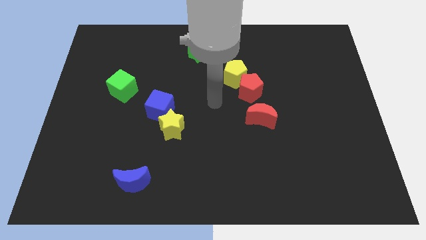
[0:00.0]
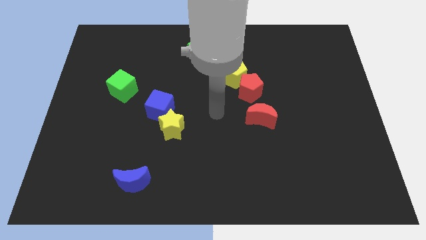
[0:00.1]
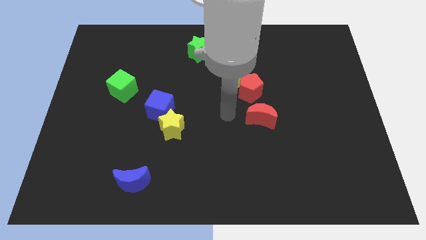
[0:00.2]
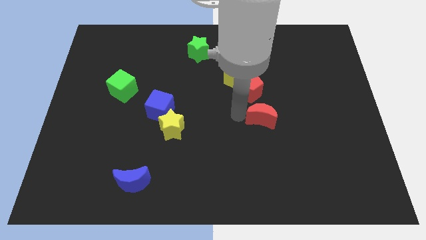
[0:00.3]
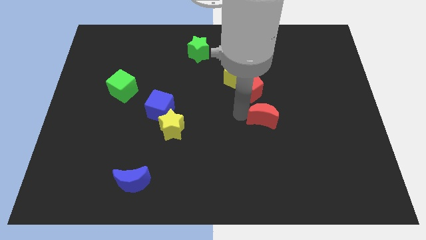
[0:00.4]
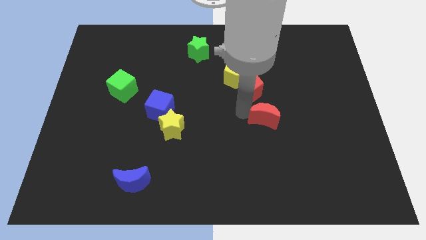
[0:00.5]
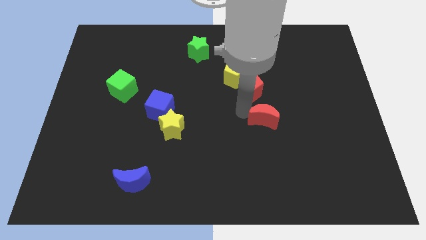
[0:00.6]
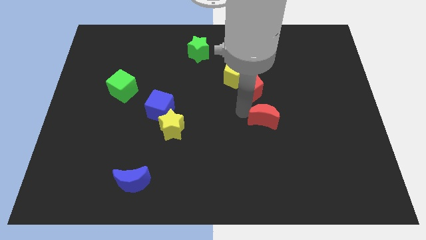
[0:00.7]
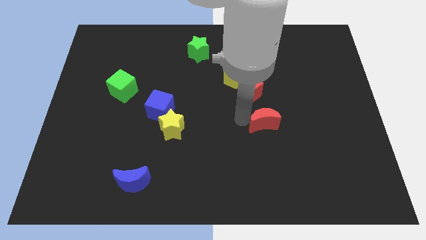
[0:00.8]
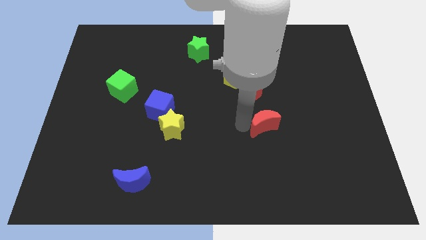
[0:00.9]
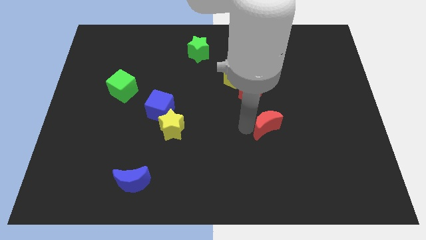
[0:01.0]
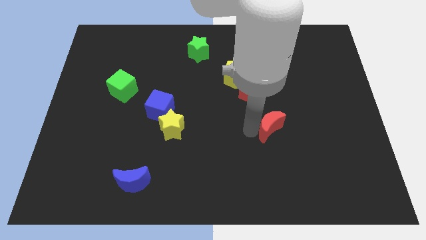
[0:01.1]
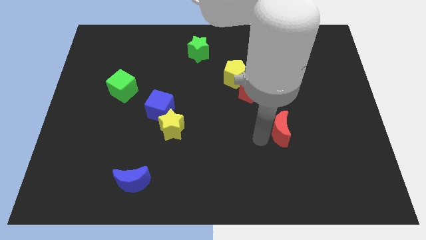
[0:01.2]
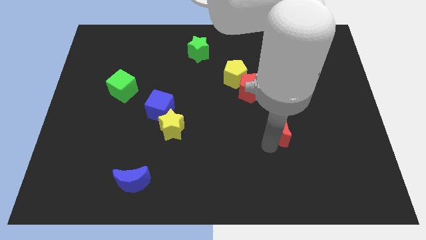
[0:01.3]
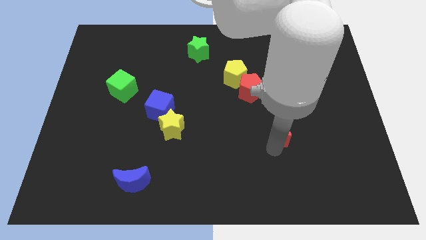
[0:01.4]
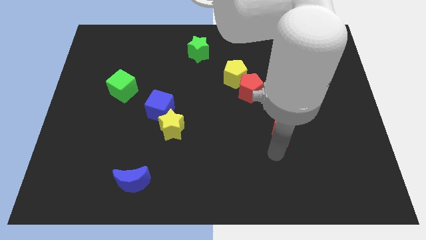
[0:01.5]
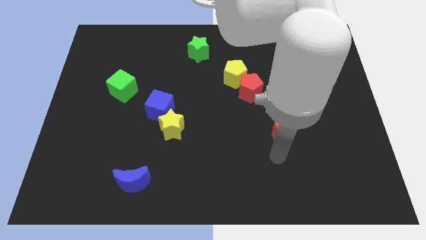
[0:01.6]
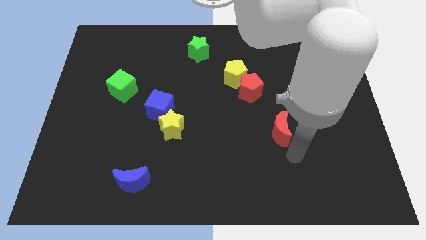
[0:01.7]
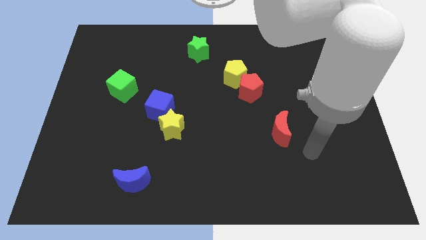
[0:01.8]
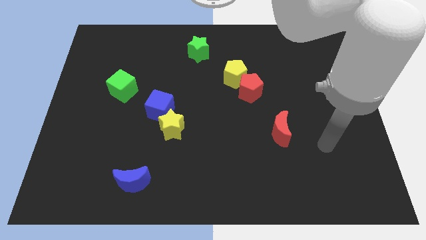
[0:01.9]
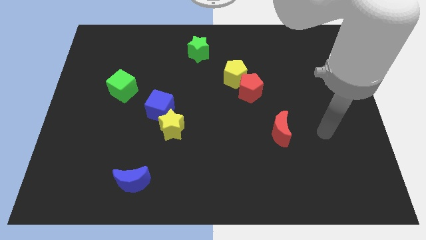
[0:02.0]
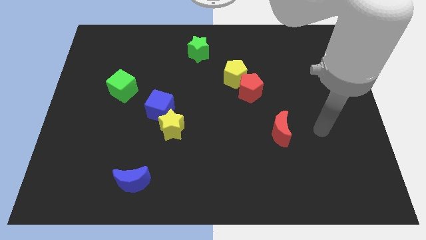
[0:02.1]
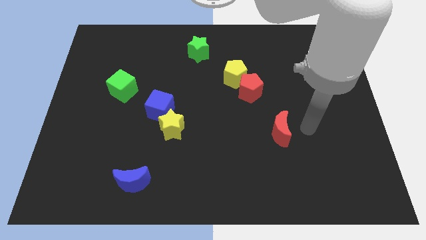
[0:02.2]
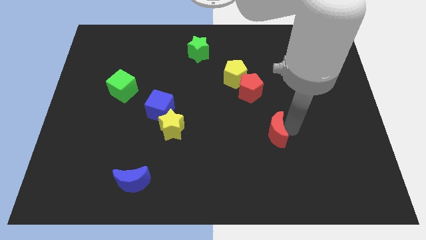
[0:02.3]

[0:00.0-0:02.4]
place the arm right to the red moon

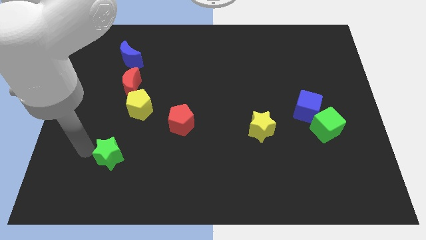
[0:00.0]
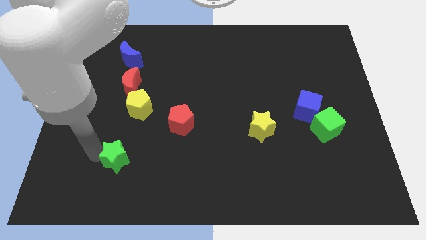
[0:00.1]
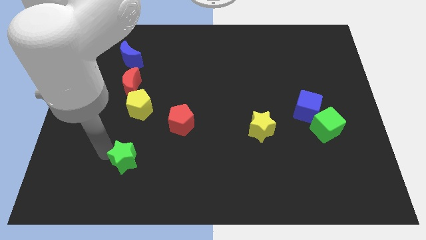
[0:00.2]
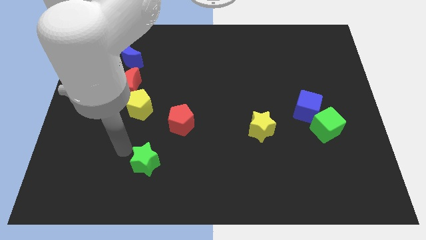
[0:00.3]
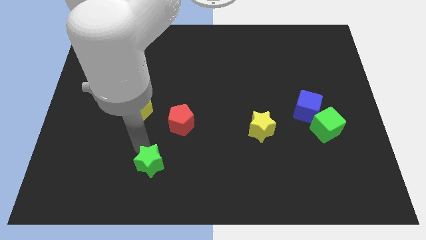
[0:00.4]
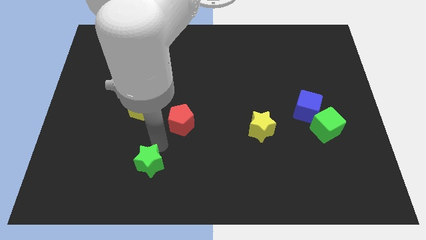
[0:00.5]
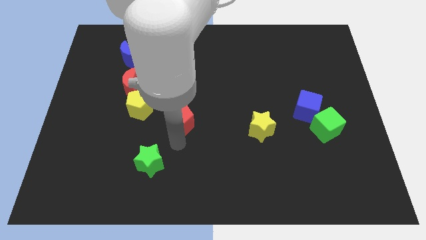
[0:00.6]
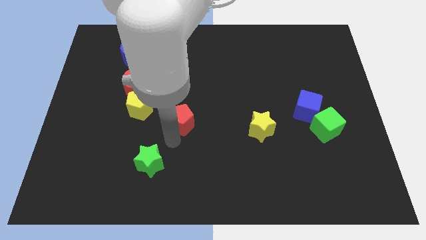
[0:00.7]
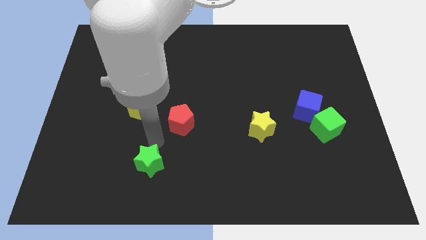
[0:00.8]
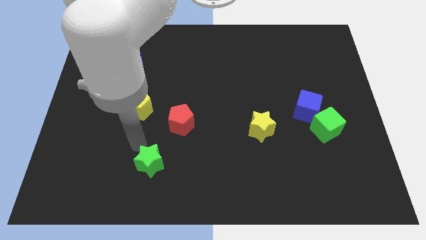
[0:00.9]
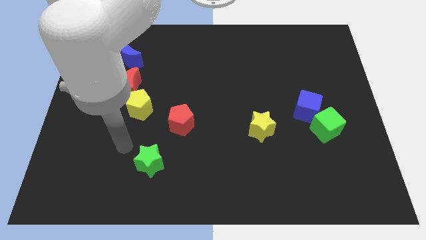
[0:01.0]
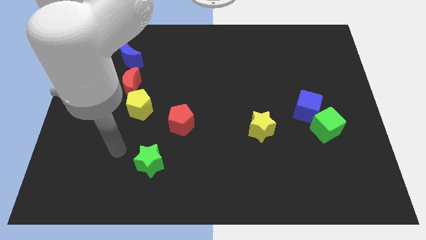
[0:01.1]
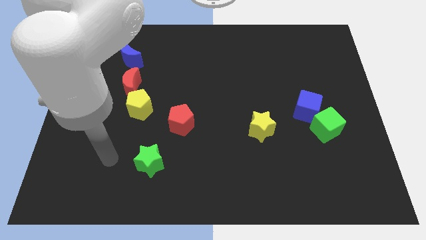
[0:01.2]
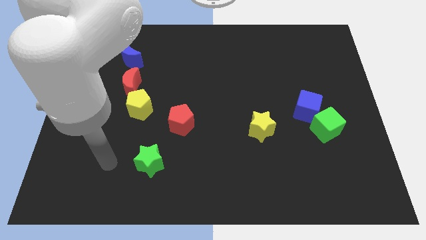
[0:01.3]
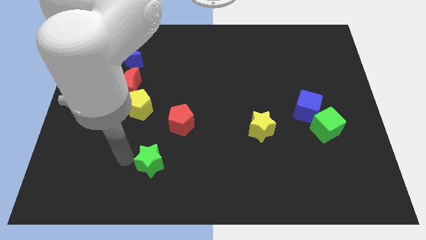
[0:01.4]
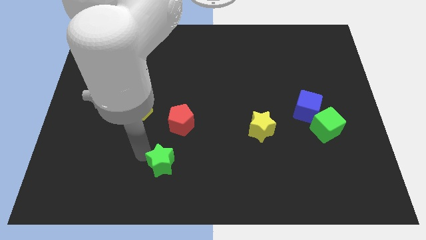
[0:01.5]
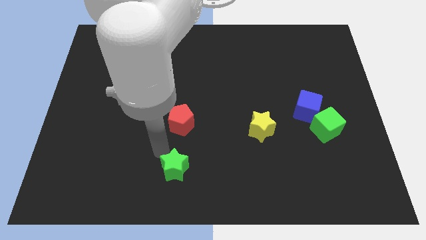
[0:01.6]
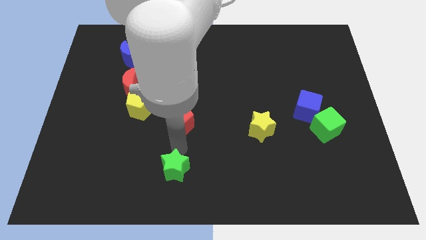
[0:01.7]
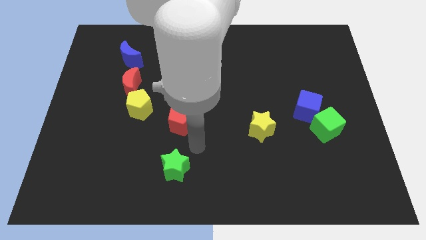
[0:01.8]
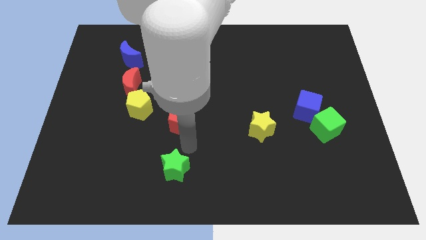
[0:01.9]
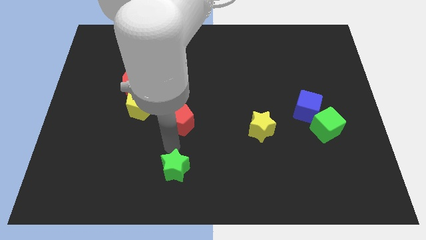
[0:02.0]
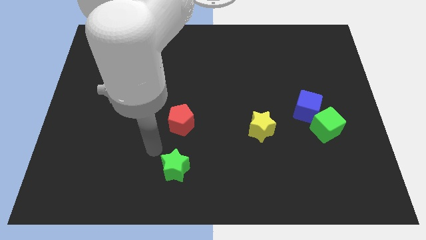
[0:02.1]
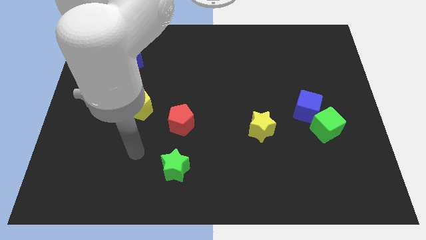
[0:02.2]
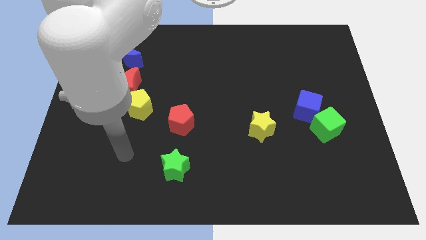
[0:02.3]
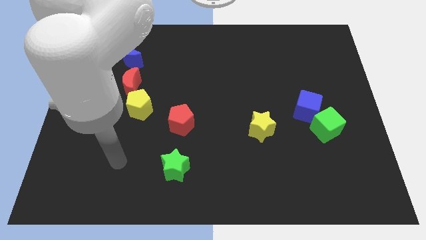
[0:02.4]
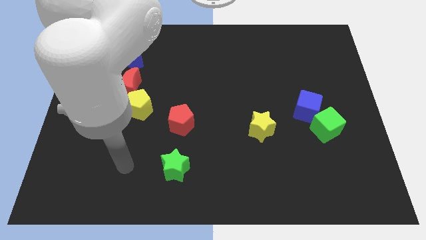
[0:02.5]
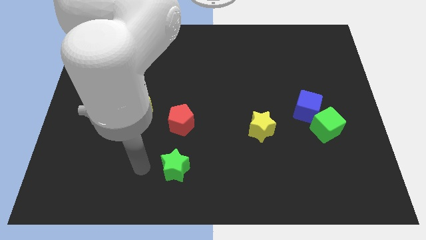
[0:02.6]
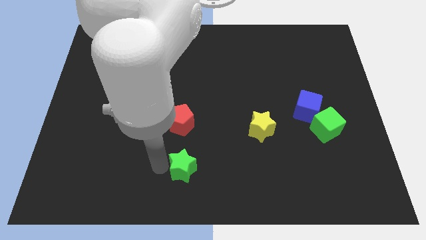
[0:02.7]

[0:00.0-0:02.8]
move green star below red pentagon

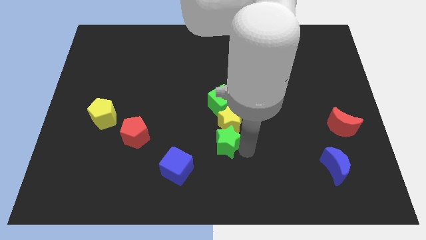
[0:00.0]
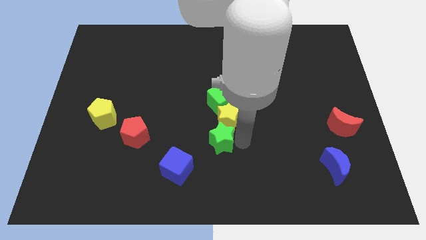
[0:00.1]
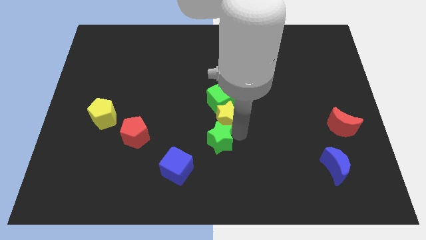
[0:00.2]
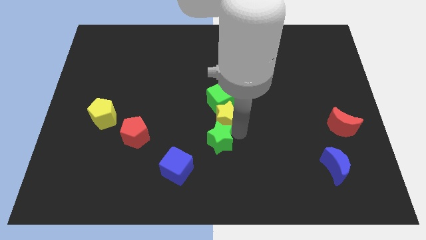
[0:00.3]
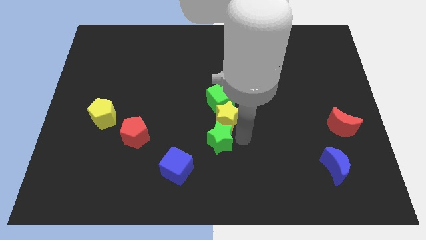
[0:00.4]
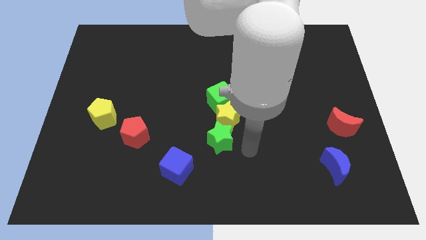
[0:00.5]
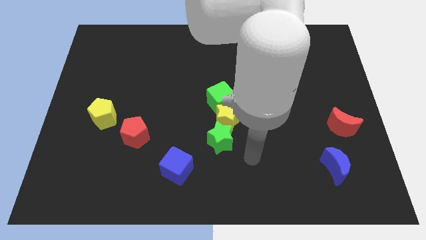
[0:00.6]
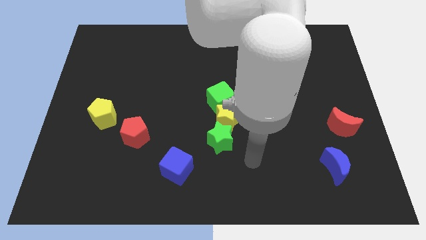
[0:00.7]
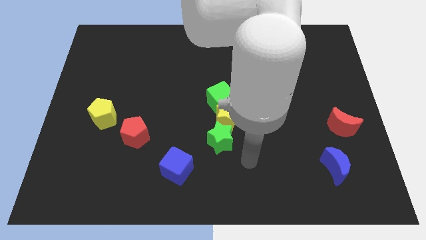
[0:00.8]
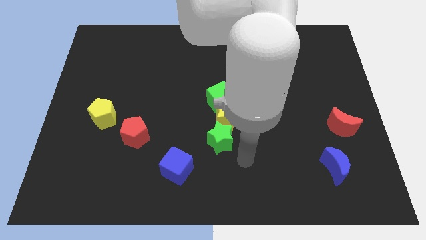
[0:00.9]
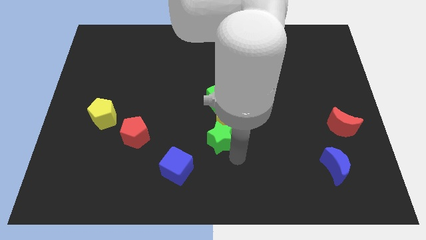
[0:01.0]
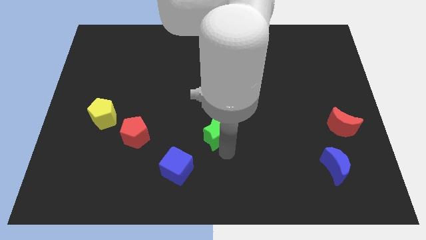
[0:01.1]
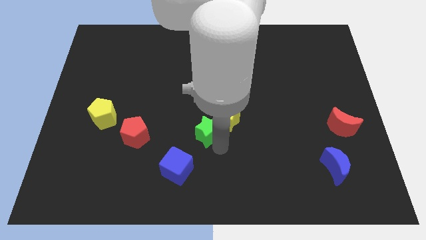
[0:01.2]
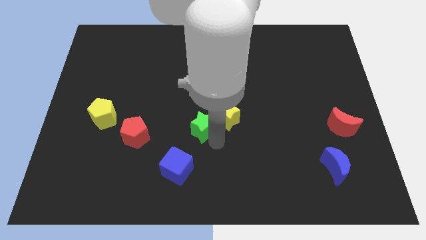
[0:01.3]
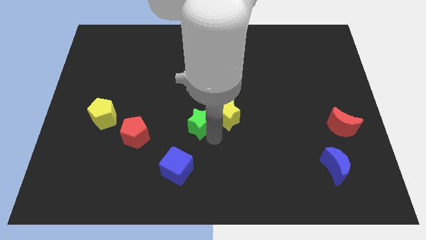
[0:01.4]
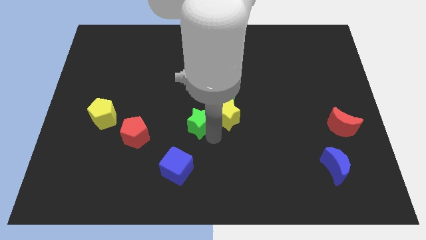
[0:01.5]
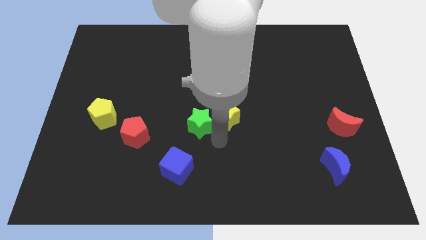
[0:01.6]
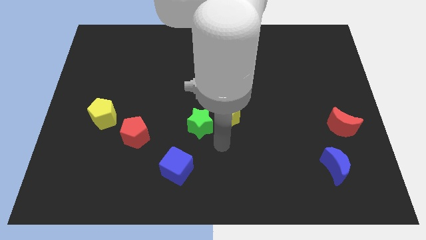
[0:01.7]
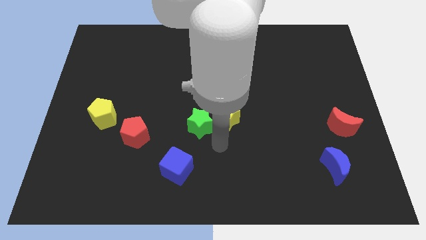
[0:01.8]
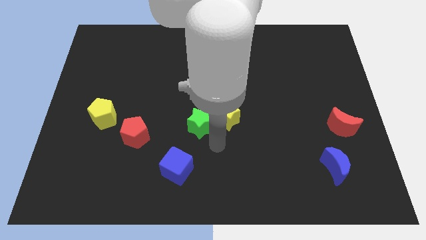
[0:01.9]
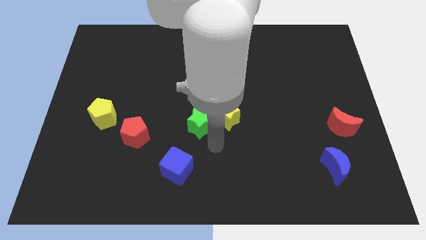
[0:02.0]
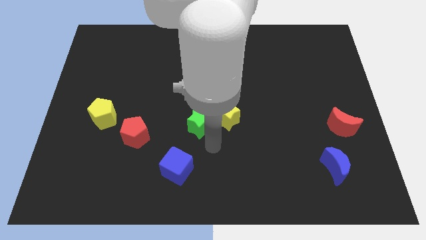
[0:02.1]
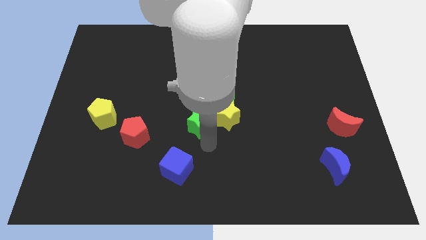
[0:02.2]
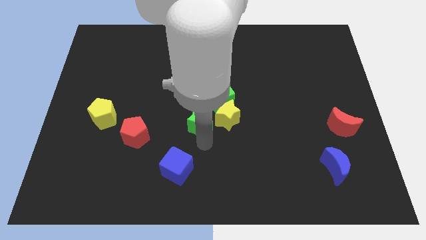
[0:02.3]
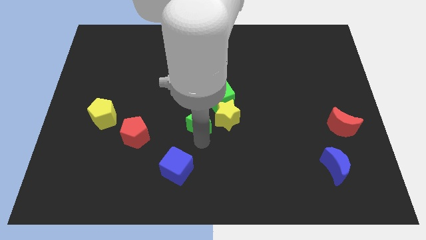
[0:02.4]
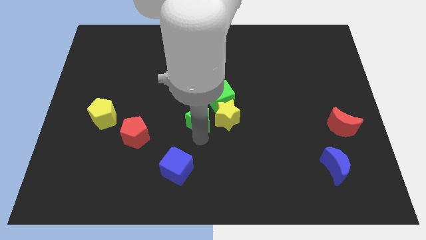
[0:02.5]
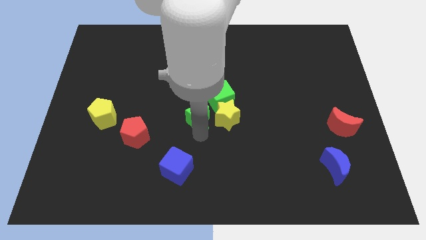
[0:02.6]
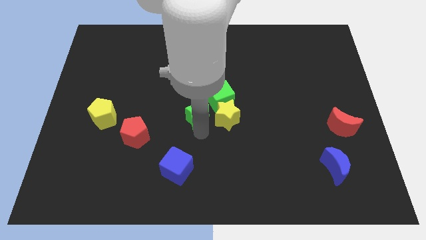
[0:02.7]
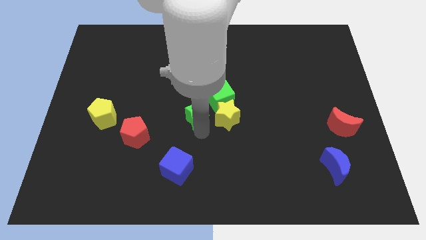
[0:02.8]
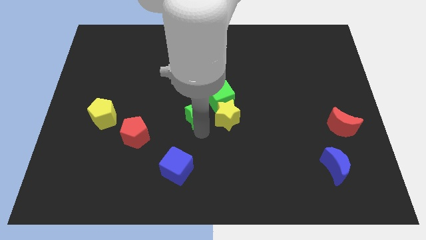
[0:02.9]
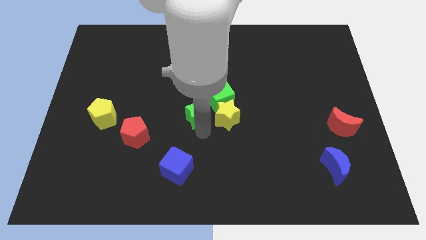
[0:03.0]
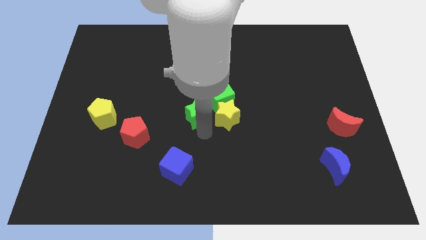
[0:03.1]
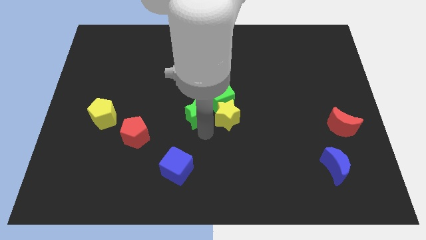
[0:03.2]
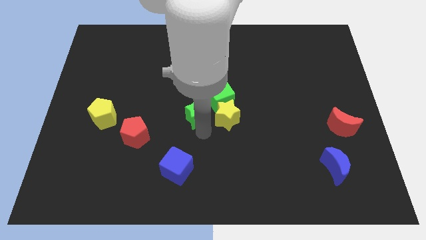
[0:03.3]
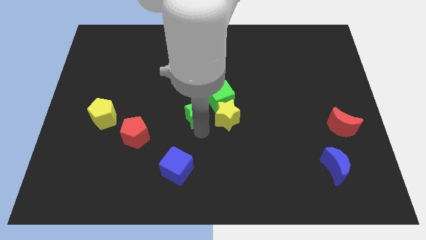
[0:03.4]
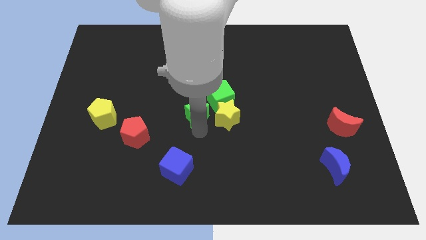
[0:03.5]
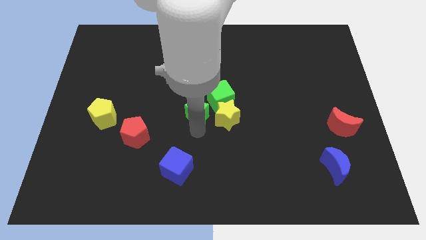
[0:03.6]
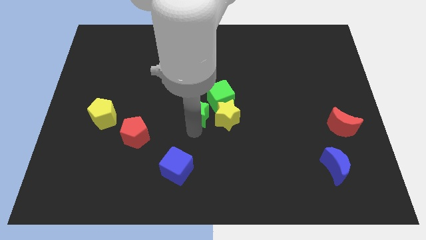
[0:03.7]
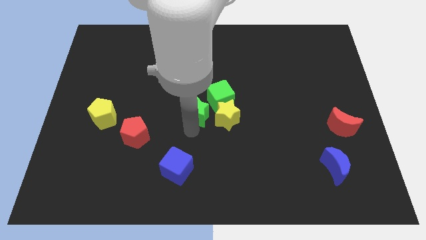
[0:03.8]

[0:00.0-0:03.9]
push the green star and place it left to the green cube
